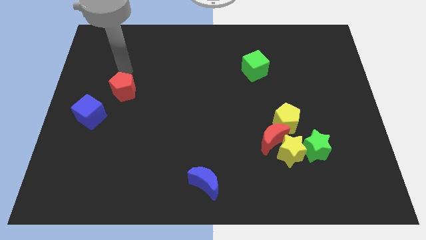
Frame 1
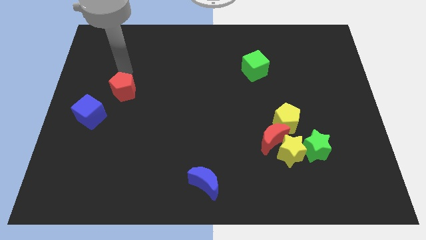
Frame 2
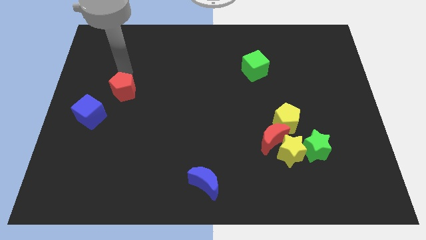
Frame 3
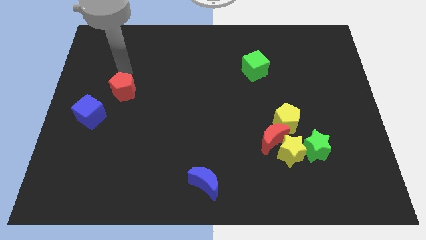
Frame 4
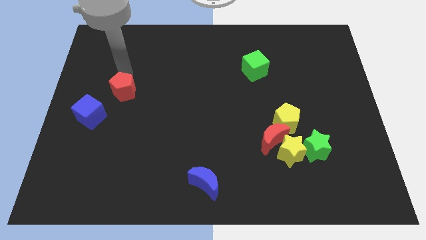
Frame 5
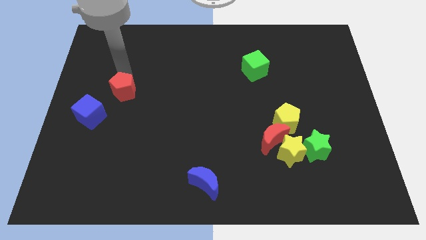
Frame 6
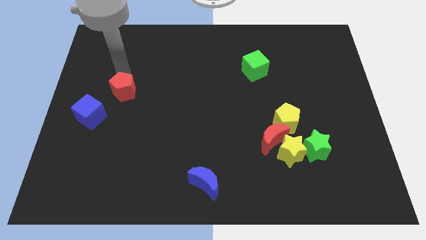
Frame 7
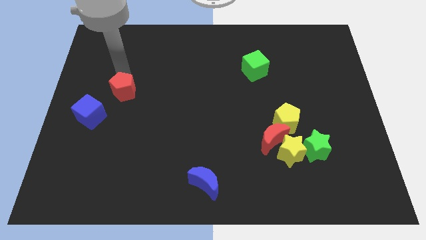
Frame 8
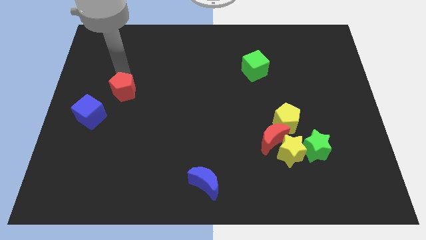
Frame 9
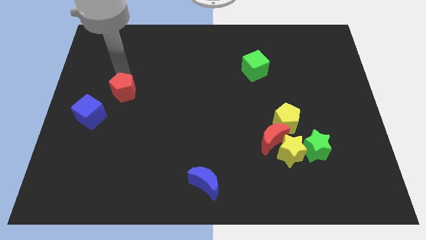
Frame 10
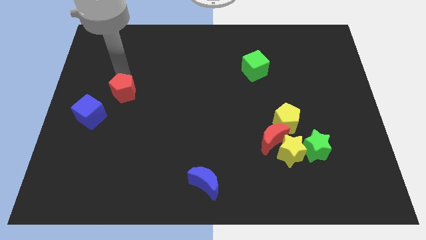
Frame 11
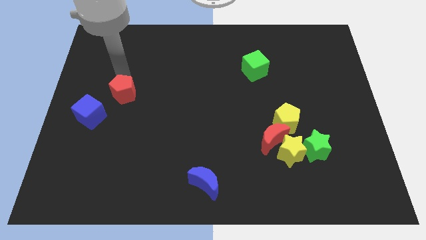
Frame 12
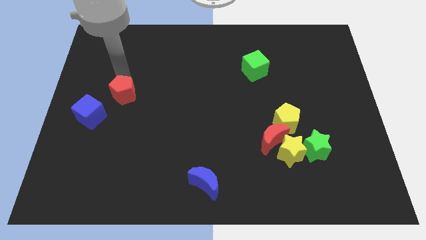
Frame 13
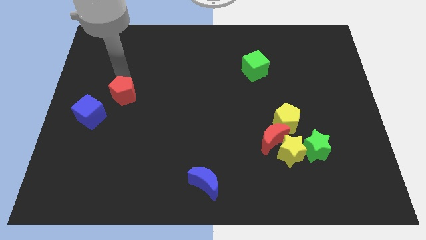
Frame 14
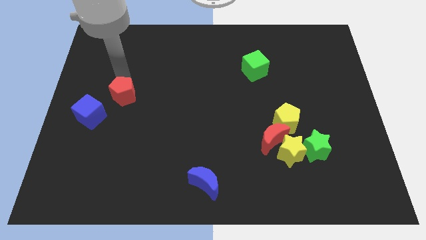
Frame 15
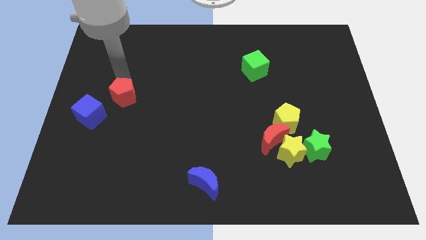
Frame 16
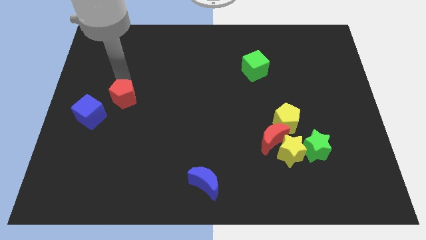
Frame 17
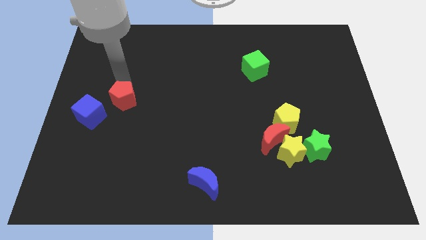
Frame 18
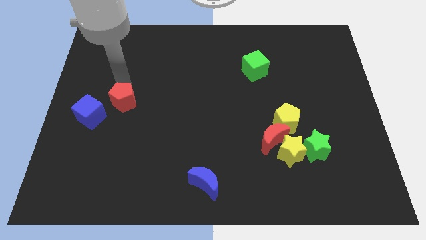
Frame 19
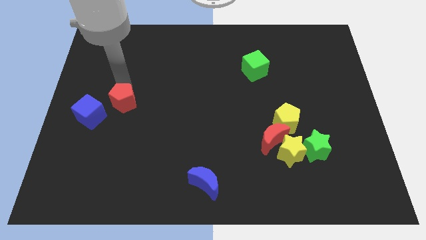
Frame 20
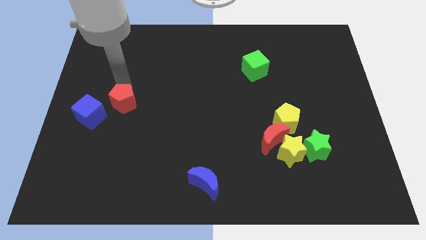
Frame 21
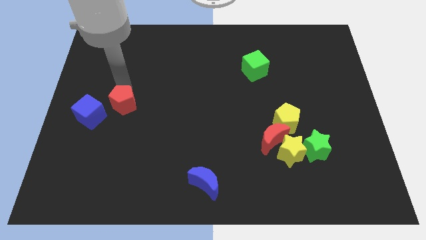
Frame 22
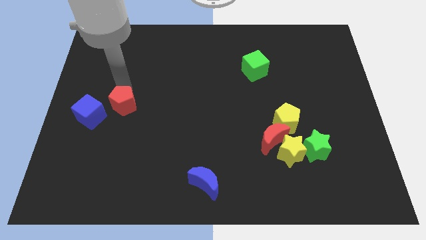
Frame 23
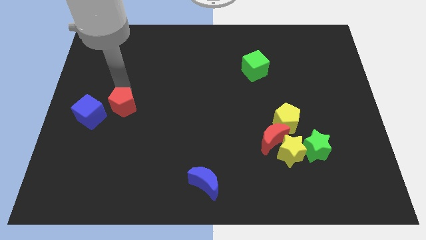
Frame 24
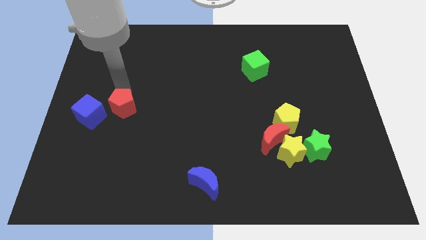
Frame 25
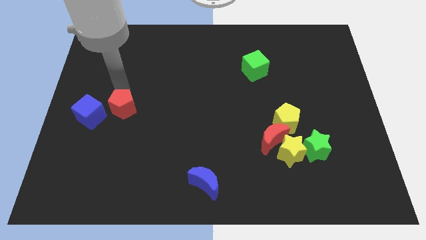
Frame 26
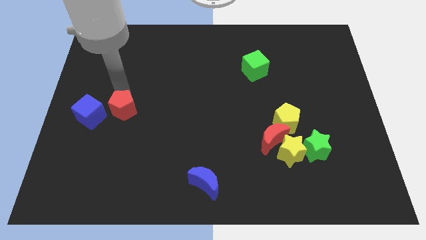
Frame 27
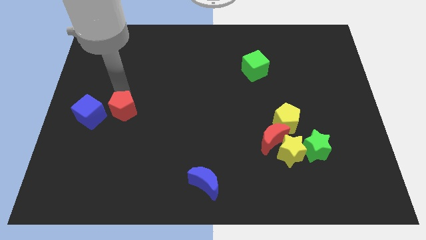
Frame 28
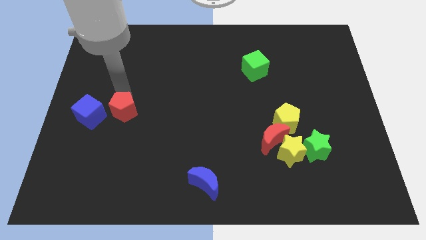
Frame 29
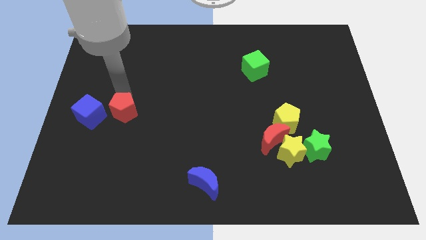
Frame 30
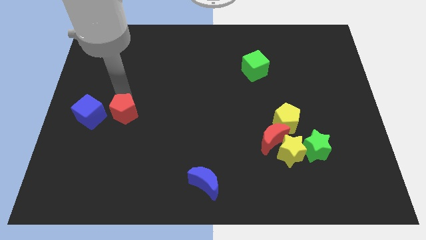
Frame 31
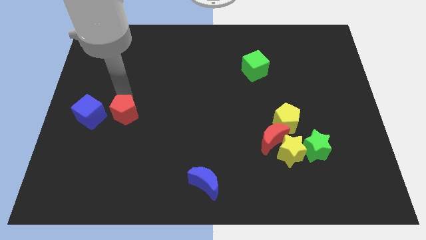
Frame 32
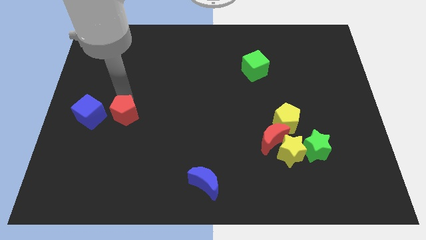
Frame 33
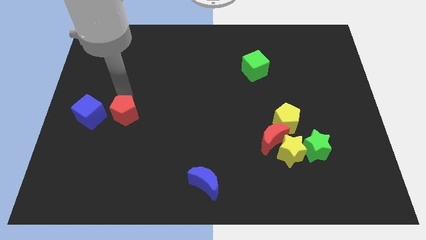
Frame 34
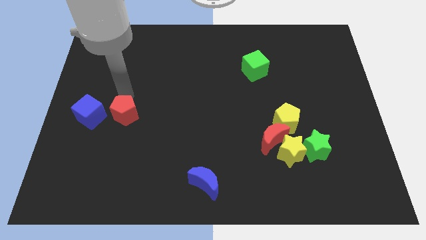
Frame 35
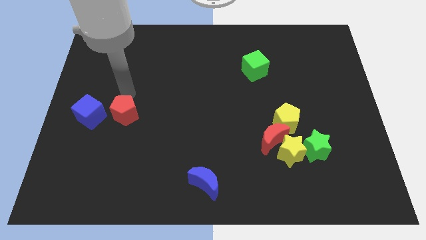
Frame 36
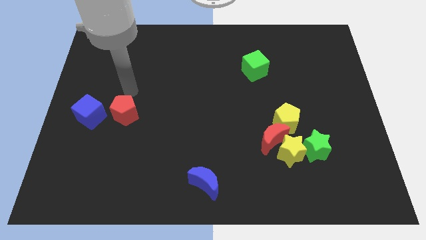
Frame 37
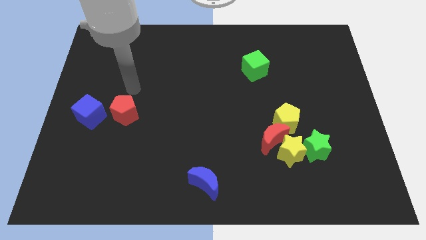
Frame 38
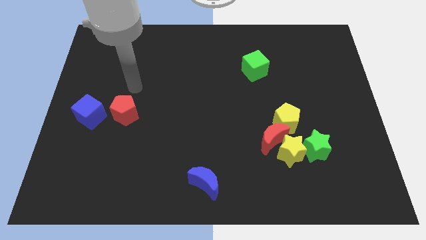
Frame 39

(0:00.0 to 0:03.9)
push the red pentagon slightly downwards

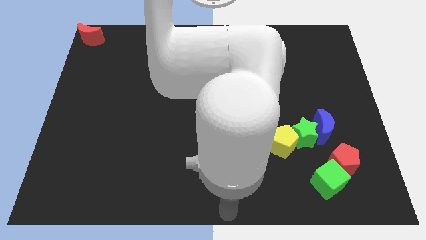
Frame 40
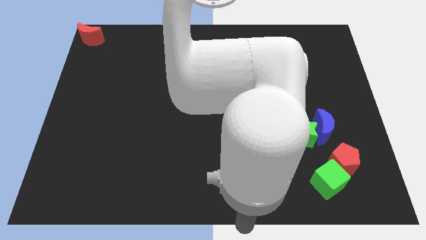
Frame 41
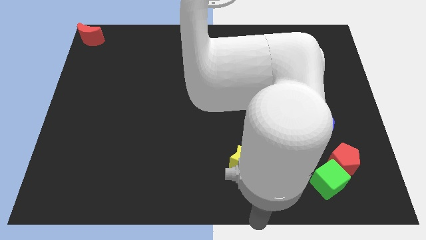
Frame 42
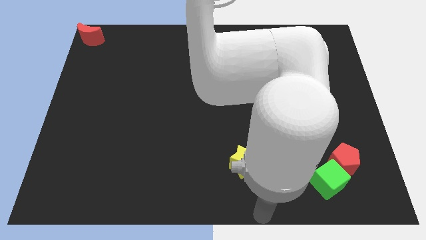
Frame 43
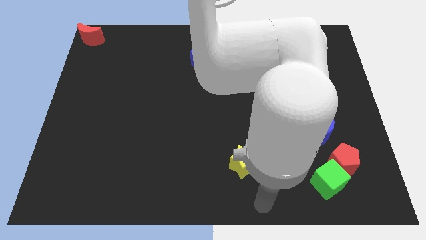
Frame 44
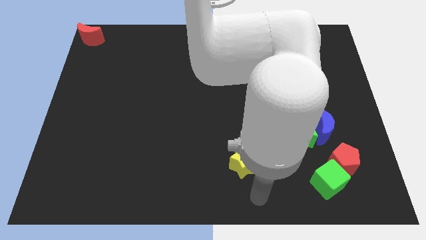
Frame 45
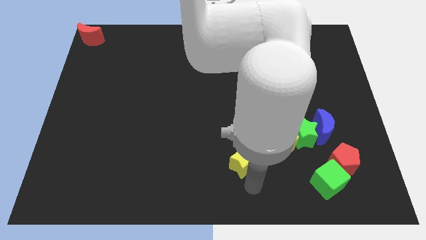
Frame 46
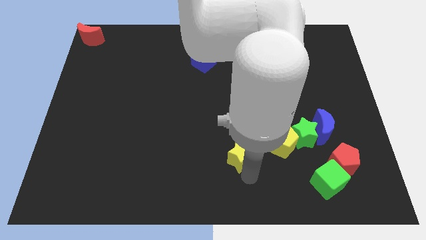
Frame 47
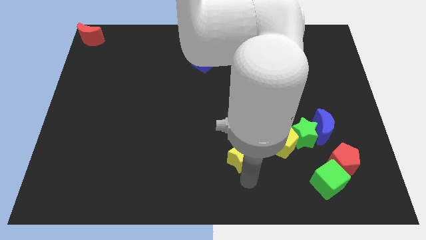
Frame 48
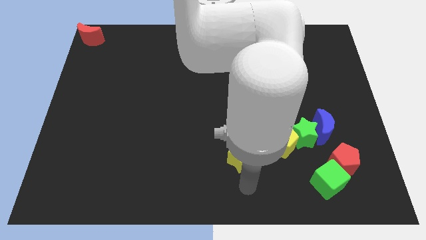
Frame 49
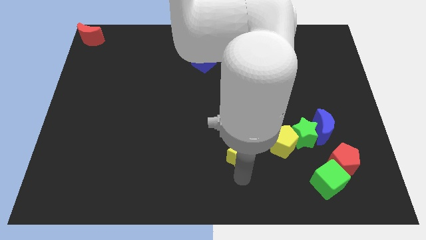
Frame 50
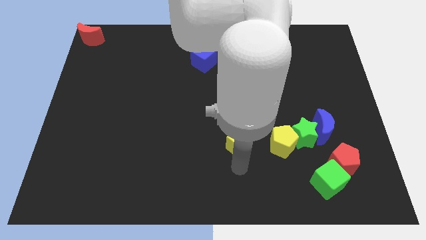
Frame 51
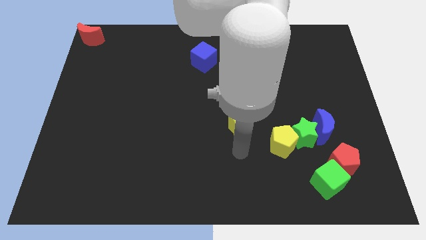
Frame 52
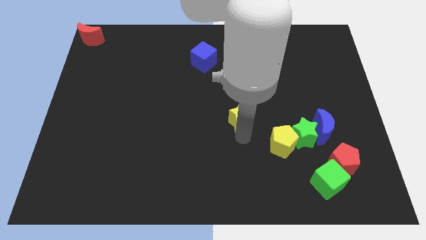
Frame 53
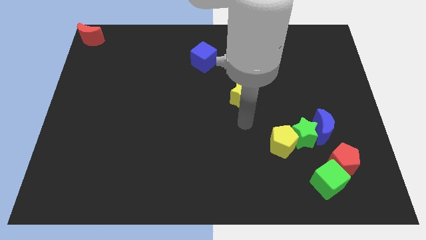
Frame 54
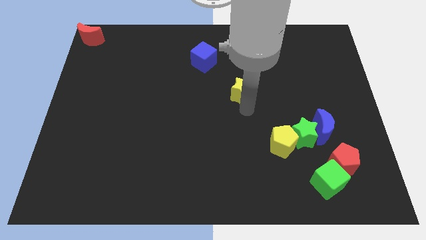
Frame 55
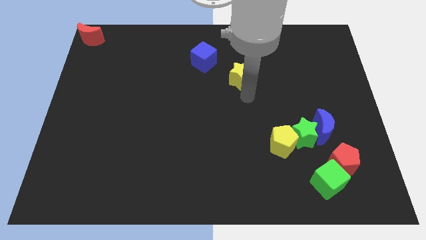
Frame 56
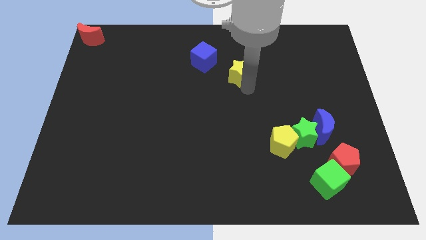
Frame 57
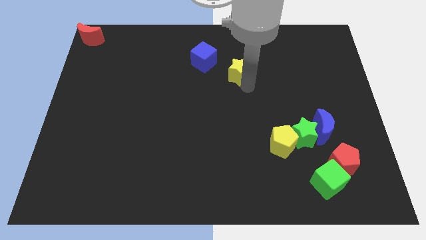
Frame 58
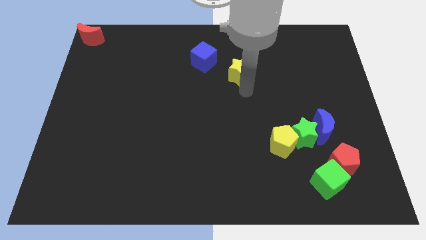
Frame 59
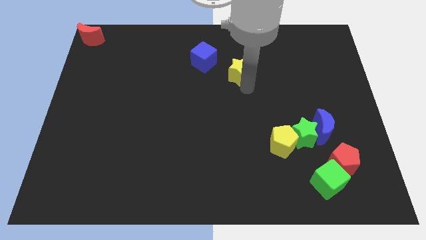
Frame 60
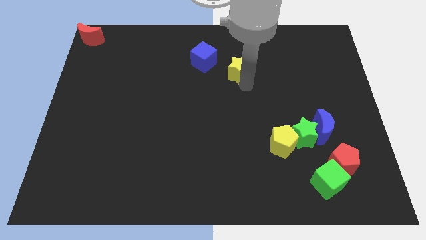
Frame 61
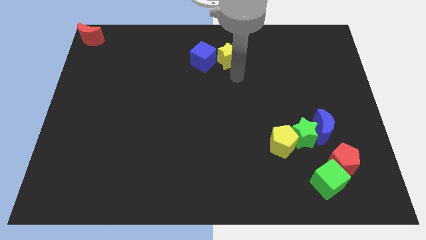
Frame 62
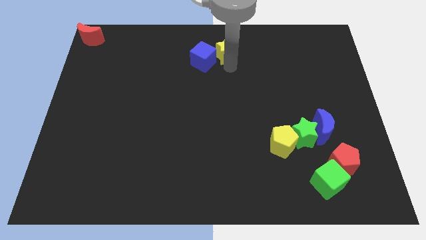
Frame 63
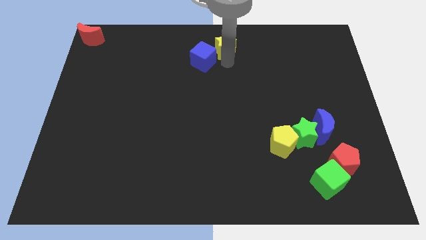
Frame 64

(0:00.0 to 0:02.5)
push the yellow star to the right of the blue cube

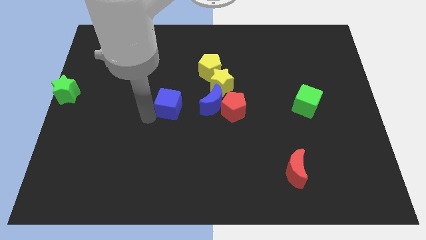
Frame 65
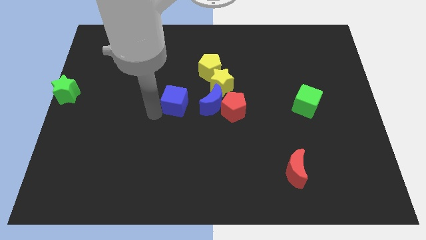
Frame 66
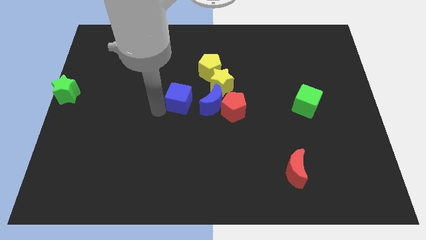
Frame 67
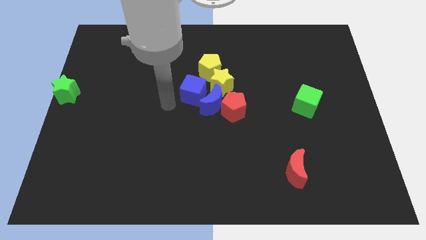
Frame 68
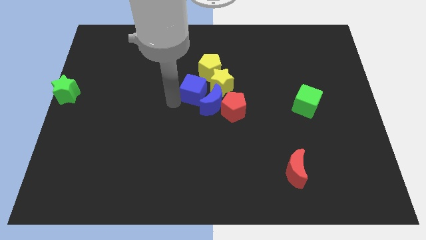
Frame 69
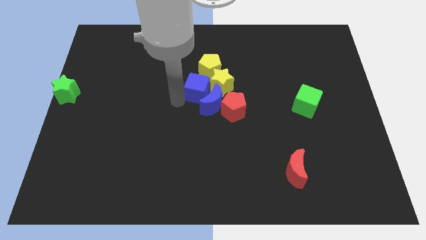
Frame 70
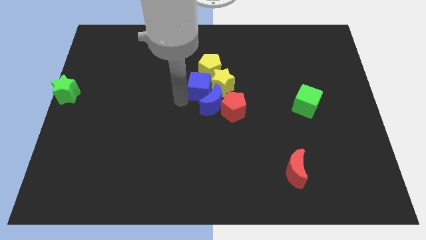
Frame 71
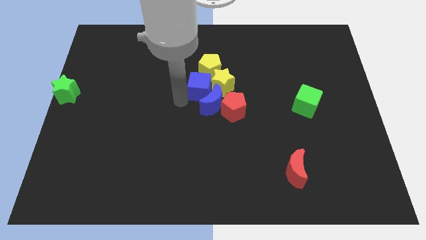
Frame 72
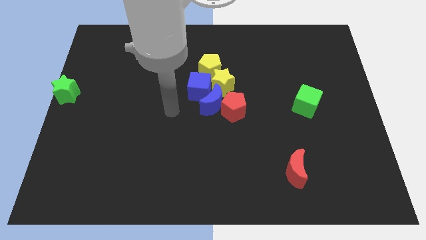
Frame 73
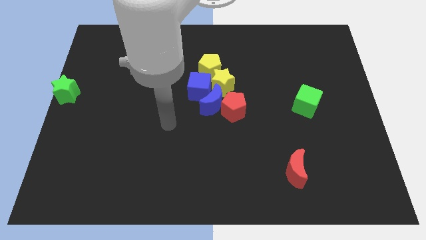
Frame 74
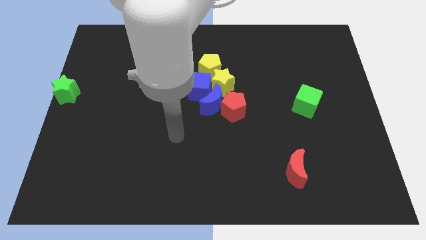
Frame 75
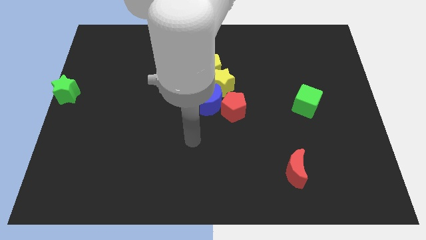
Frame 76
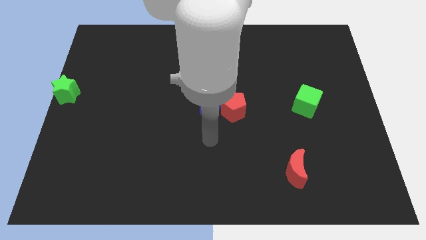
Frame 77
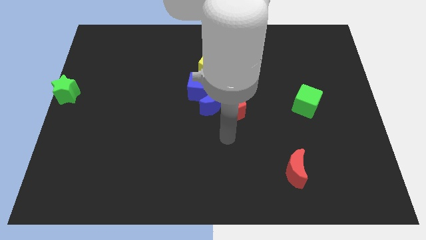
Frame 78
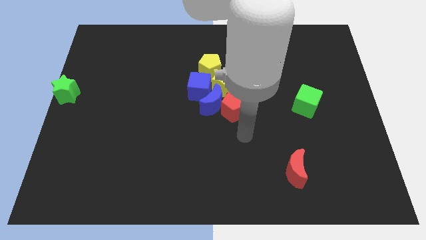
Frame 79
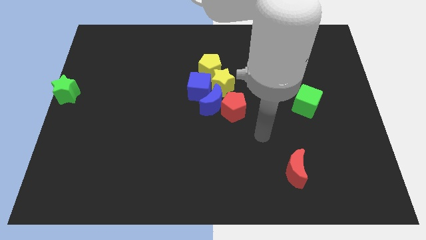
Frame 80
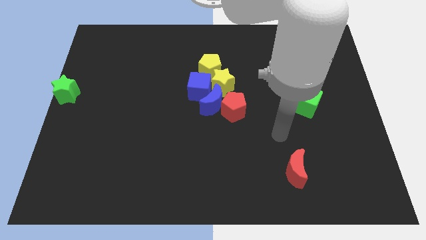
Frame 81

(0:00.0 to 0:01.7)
slide the blue cube into the yellow blocks

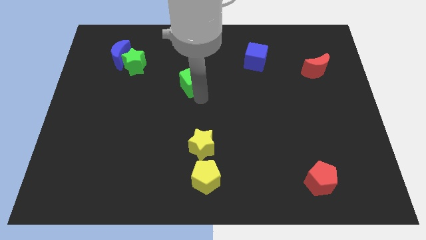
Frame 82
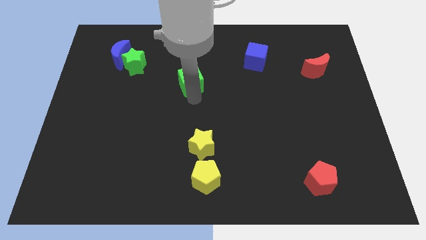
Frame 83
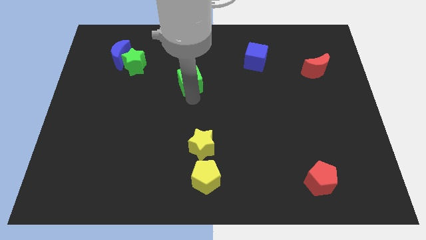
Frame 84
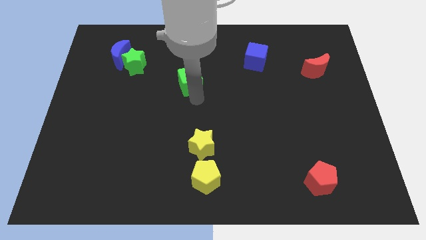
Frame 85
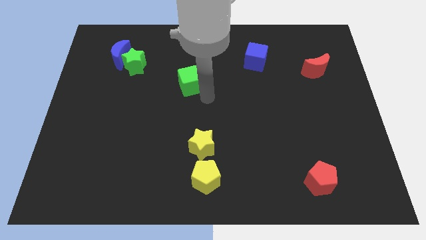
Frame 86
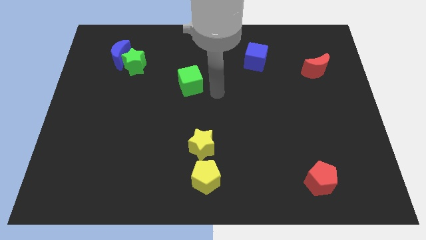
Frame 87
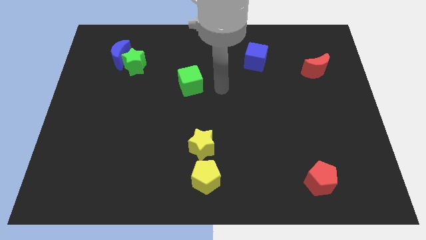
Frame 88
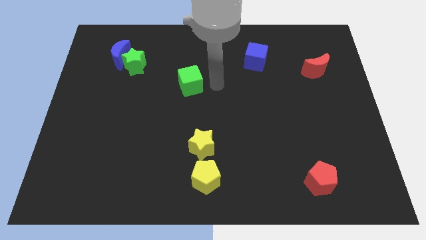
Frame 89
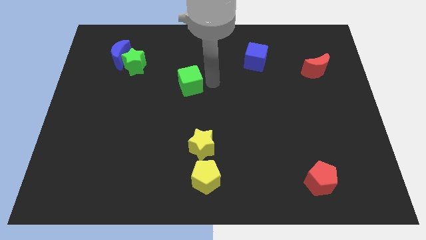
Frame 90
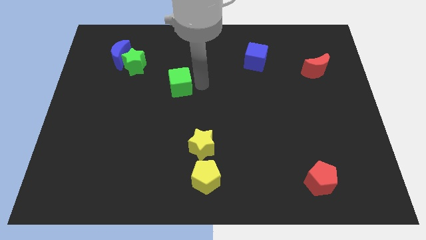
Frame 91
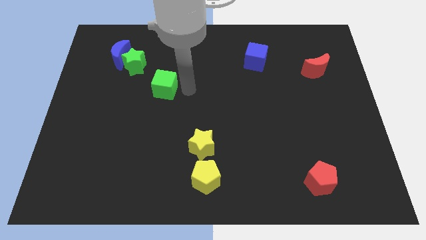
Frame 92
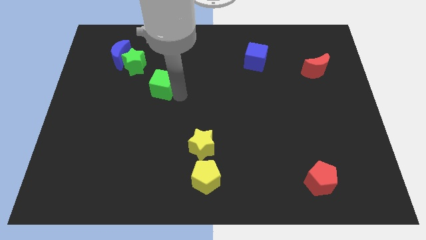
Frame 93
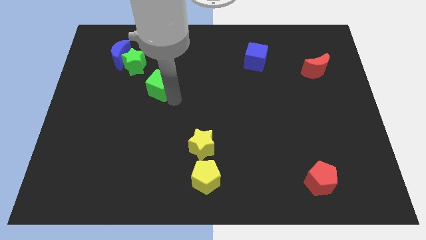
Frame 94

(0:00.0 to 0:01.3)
move the green right below the green star
